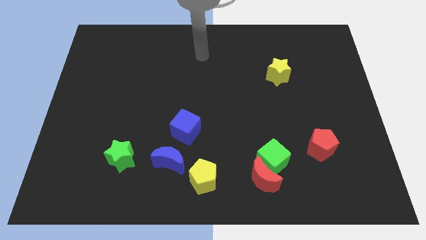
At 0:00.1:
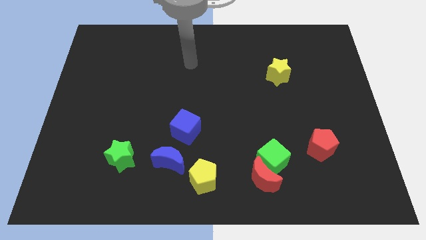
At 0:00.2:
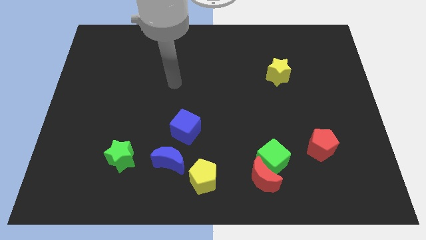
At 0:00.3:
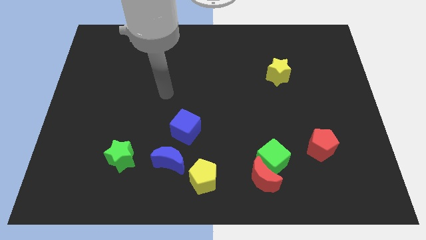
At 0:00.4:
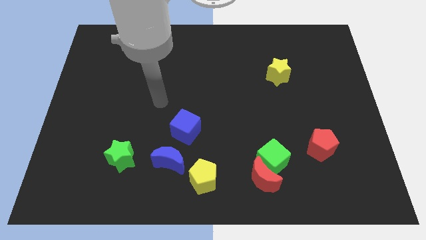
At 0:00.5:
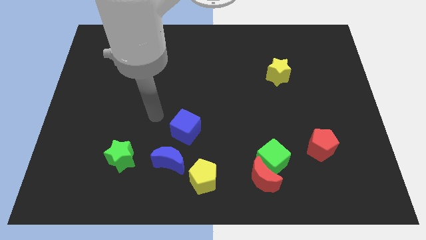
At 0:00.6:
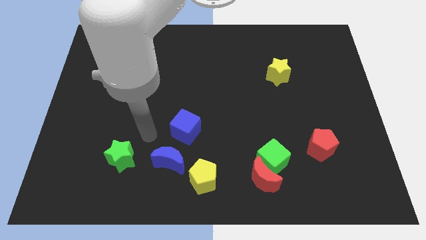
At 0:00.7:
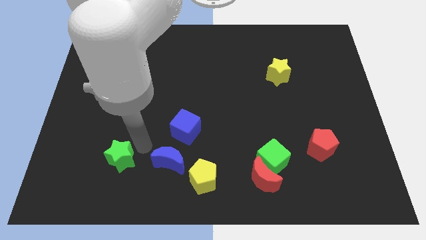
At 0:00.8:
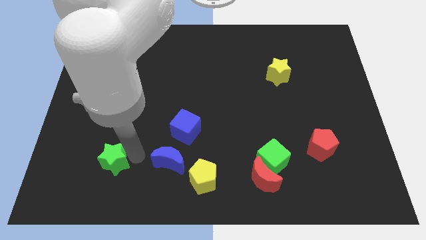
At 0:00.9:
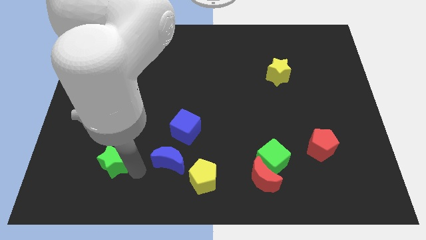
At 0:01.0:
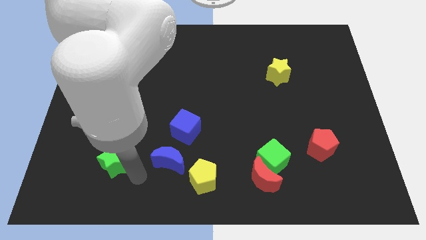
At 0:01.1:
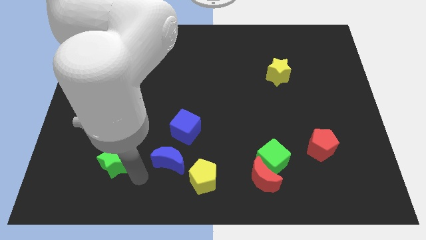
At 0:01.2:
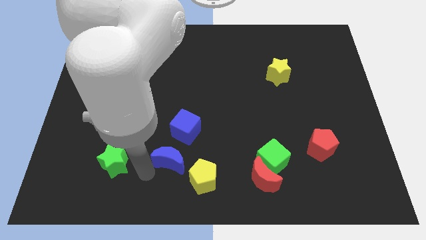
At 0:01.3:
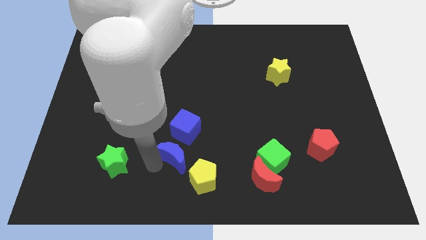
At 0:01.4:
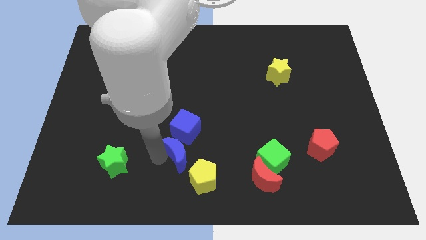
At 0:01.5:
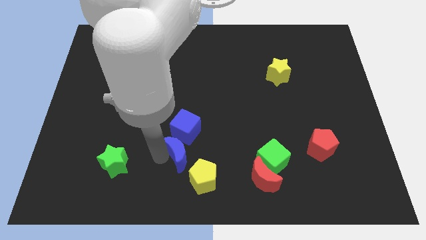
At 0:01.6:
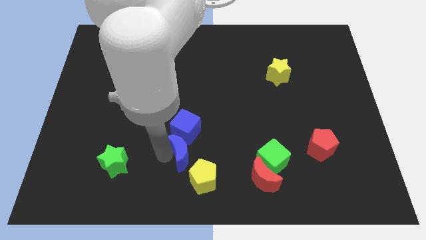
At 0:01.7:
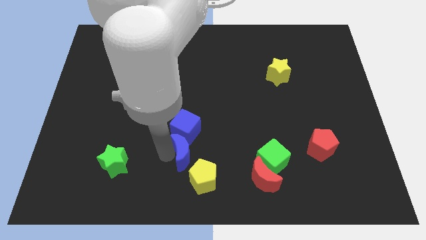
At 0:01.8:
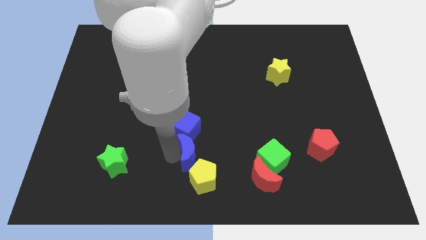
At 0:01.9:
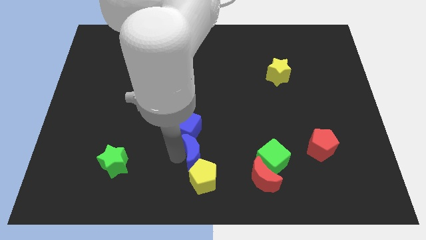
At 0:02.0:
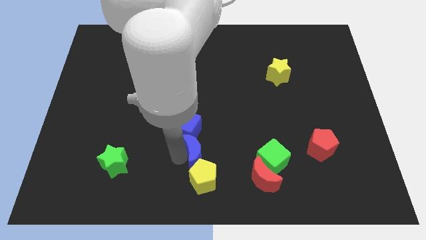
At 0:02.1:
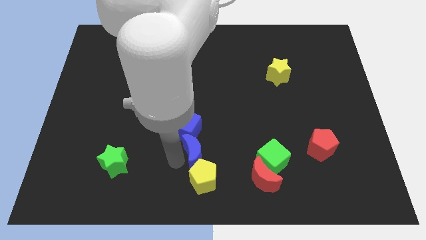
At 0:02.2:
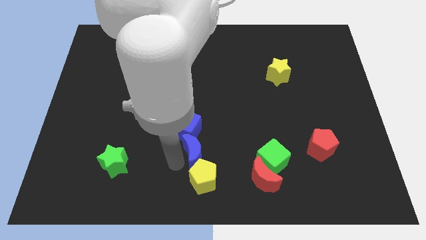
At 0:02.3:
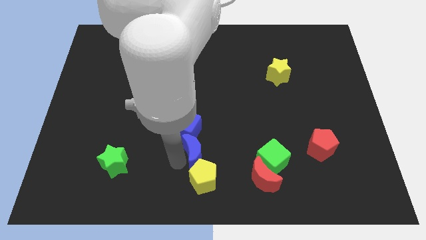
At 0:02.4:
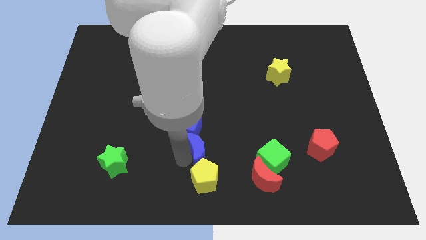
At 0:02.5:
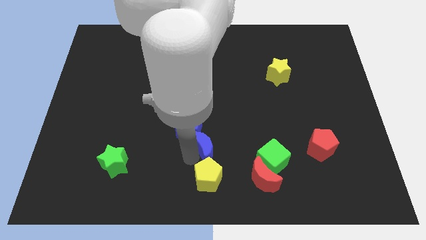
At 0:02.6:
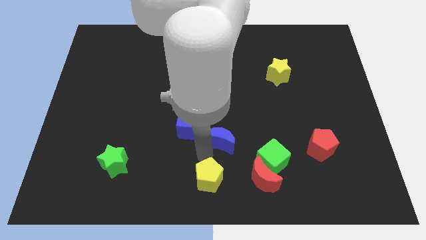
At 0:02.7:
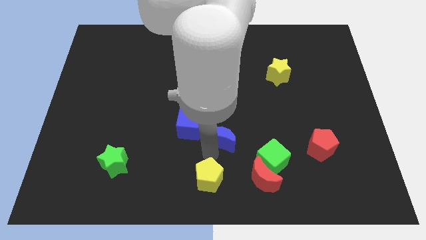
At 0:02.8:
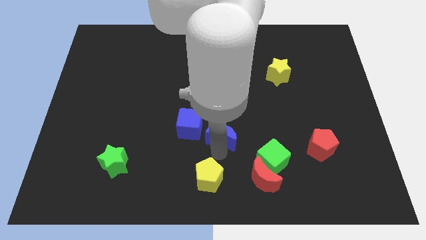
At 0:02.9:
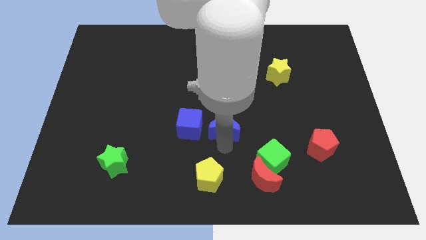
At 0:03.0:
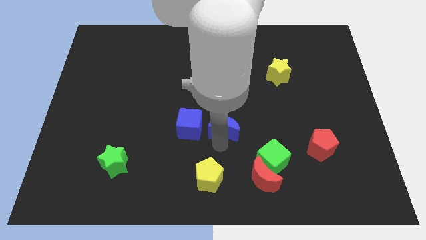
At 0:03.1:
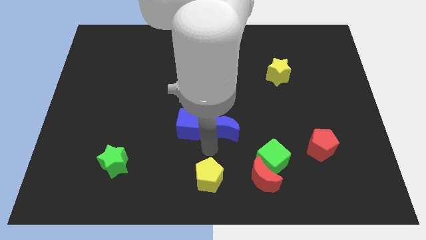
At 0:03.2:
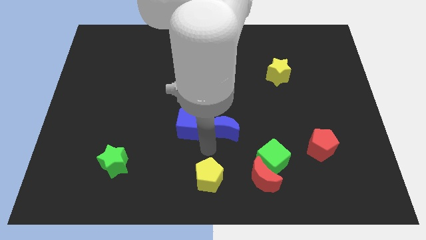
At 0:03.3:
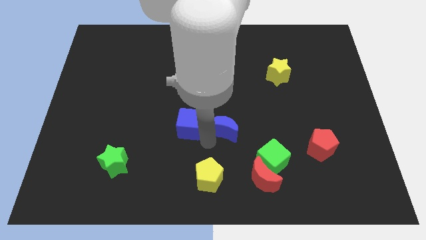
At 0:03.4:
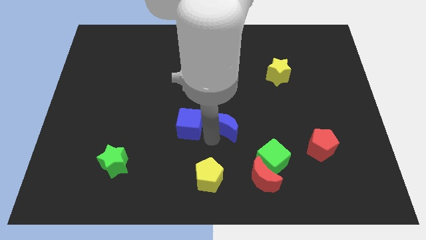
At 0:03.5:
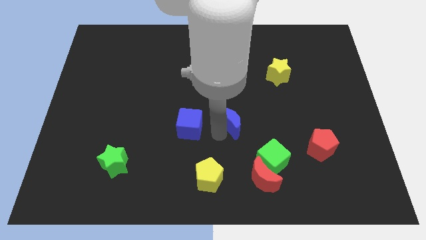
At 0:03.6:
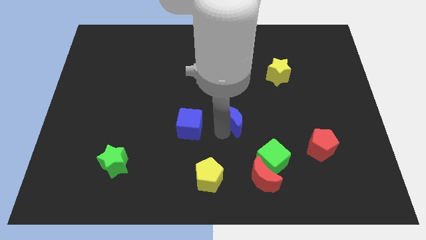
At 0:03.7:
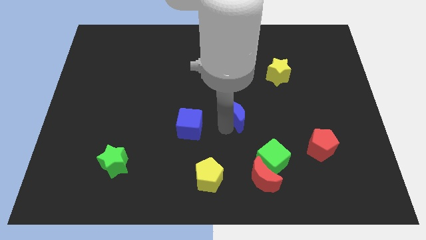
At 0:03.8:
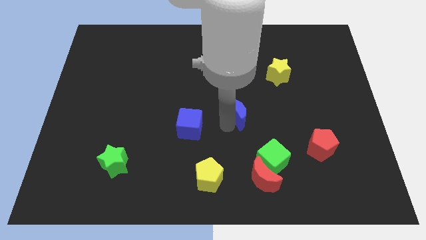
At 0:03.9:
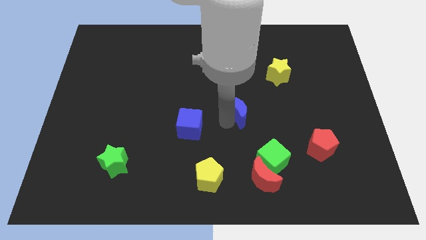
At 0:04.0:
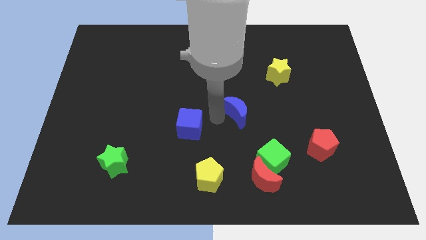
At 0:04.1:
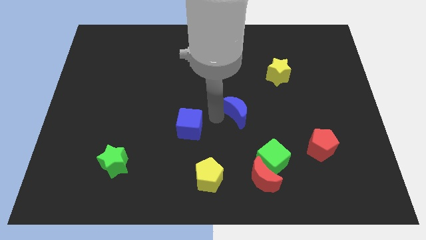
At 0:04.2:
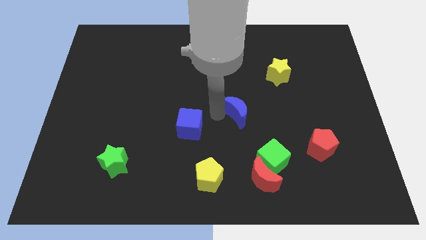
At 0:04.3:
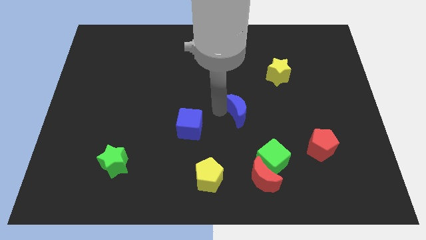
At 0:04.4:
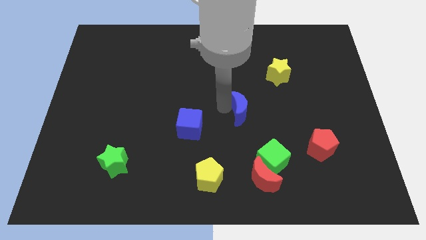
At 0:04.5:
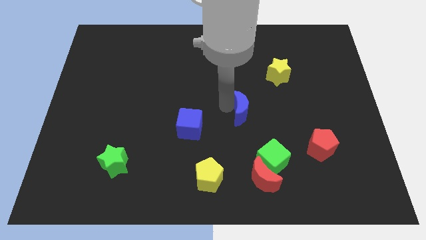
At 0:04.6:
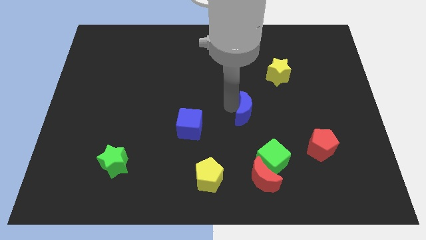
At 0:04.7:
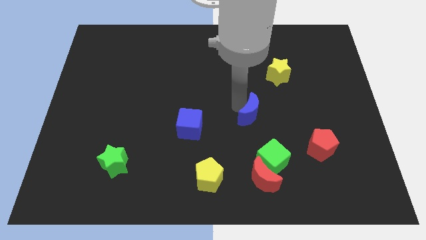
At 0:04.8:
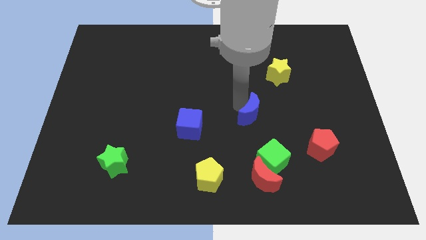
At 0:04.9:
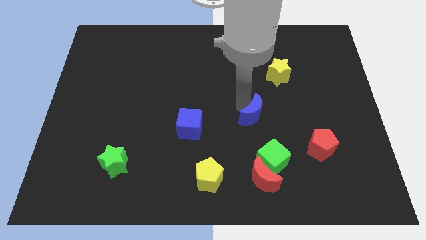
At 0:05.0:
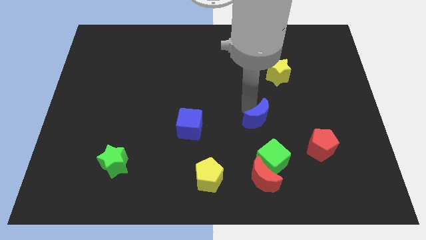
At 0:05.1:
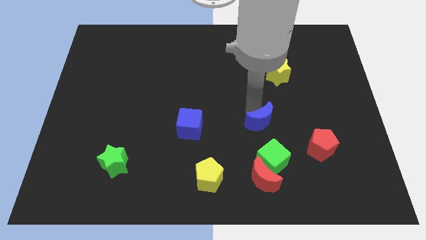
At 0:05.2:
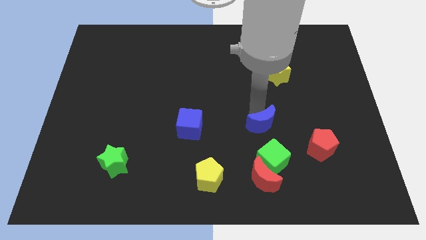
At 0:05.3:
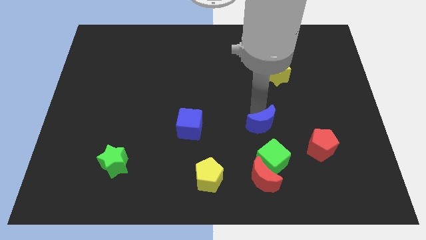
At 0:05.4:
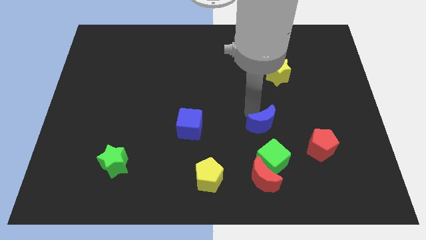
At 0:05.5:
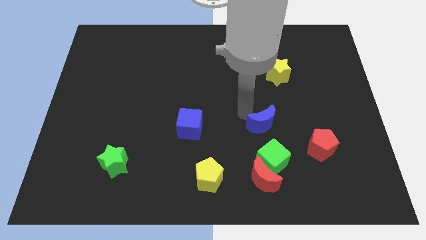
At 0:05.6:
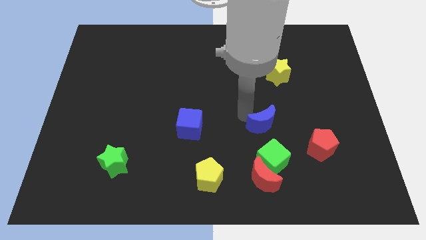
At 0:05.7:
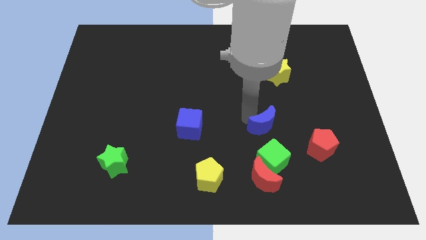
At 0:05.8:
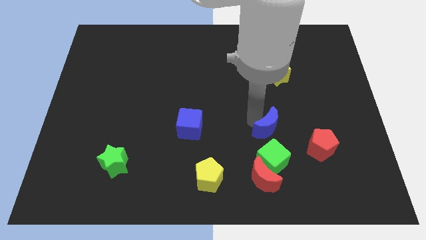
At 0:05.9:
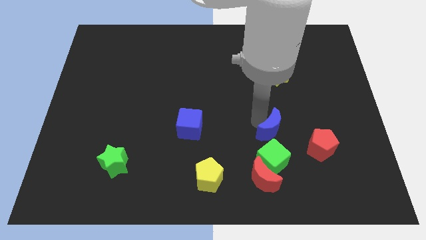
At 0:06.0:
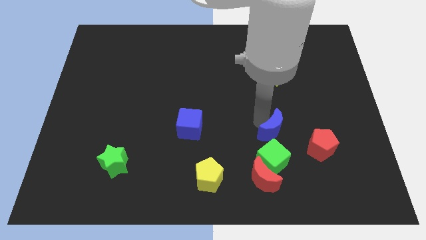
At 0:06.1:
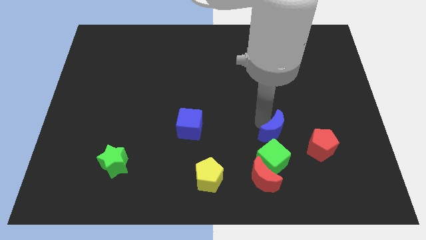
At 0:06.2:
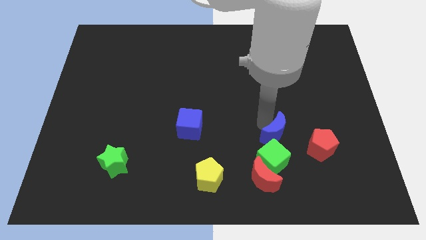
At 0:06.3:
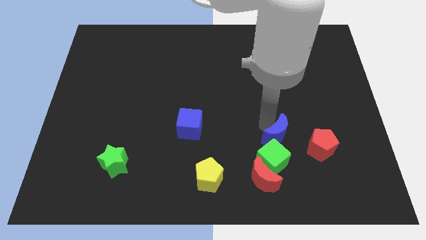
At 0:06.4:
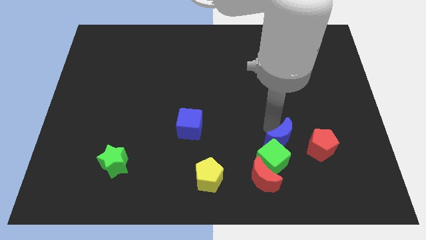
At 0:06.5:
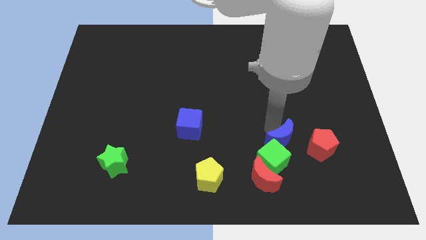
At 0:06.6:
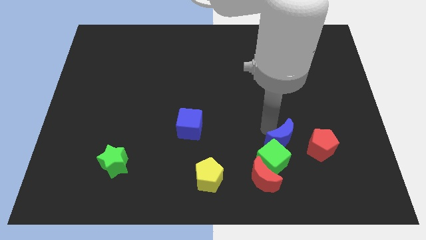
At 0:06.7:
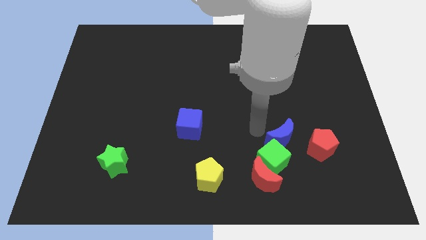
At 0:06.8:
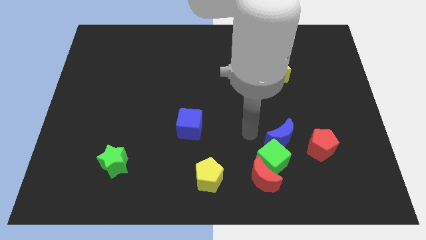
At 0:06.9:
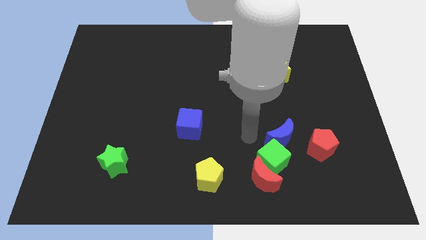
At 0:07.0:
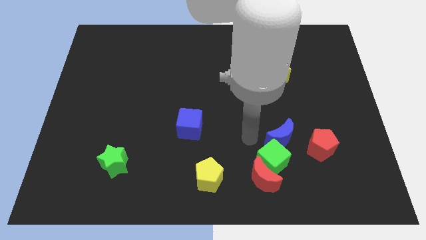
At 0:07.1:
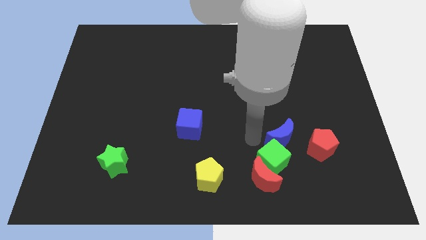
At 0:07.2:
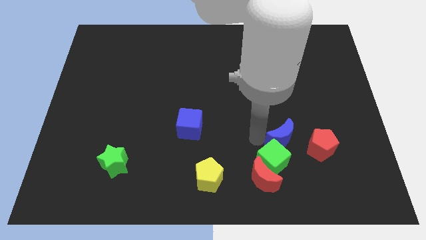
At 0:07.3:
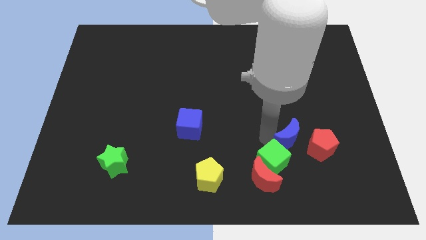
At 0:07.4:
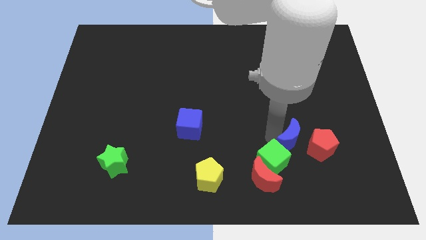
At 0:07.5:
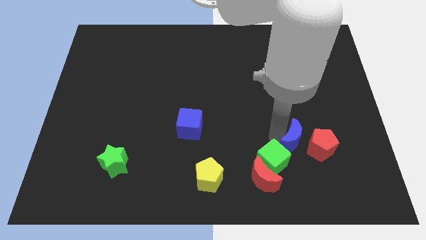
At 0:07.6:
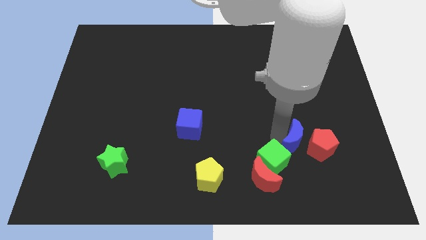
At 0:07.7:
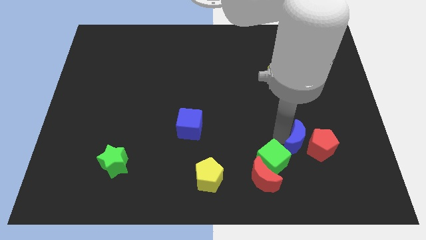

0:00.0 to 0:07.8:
slide the blue moon towards the red pentagon

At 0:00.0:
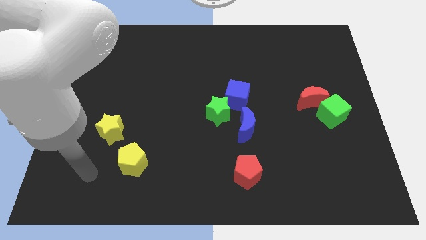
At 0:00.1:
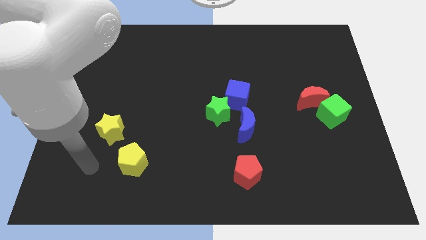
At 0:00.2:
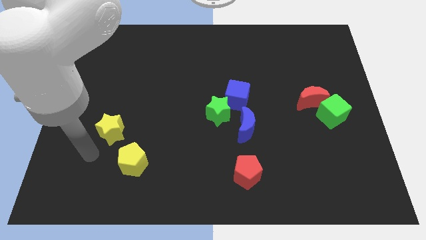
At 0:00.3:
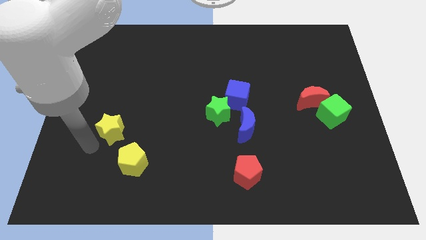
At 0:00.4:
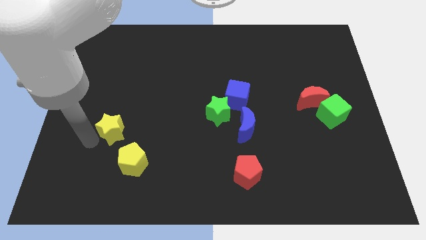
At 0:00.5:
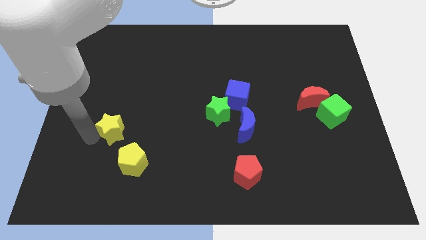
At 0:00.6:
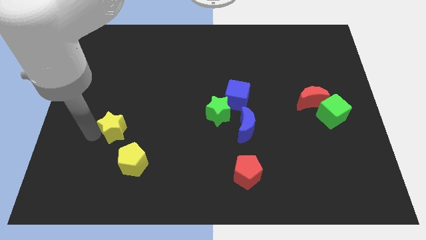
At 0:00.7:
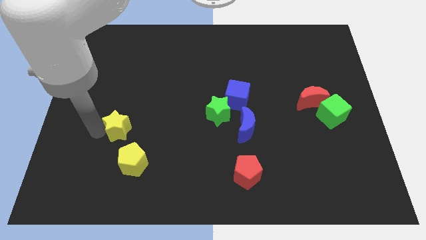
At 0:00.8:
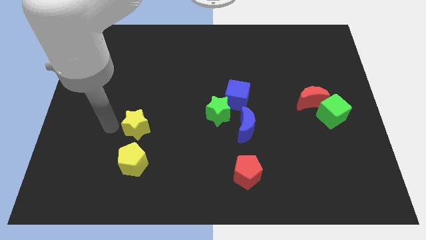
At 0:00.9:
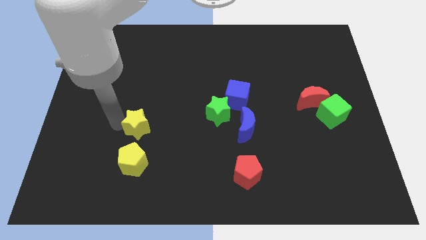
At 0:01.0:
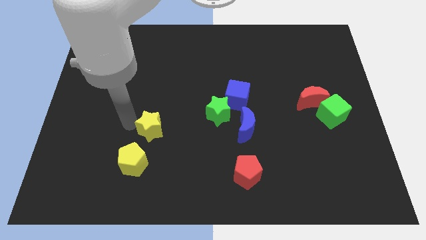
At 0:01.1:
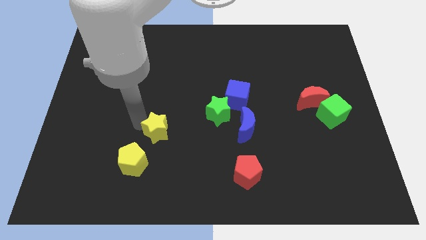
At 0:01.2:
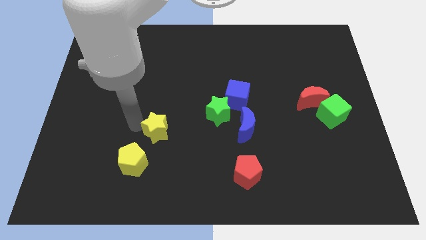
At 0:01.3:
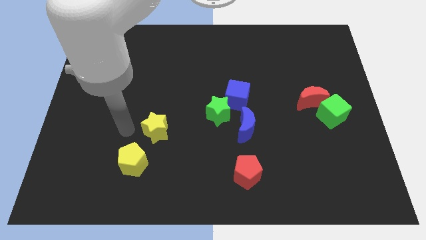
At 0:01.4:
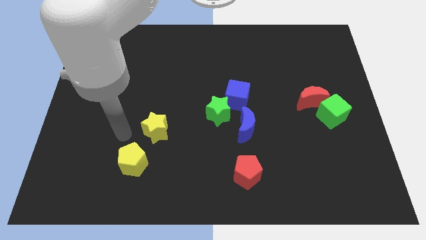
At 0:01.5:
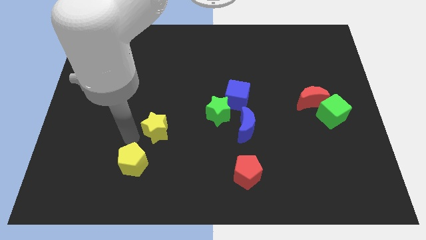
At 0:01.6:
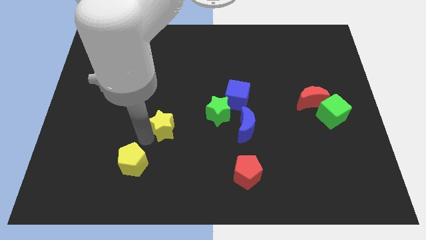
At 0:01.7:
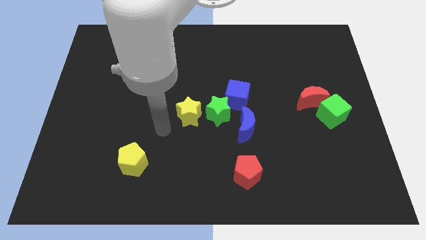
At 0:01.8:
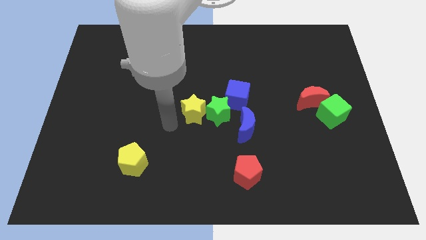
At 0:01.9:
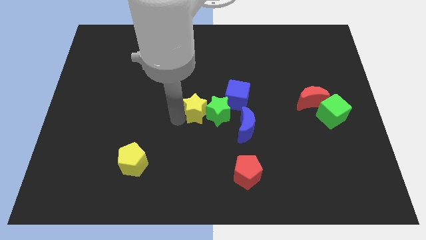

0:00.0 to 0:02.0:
slide the yellow star towards the green star
